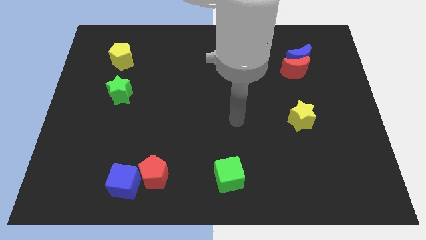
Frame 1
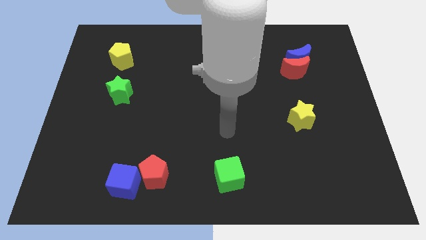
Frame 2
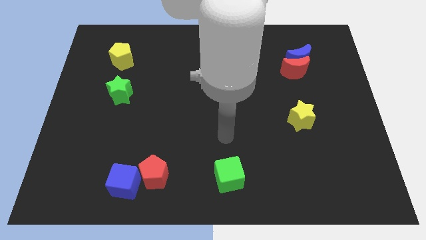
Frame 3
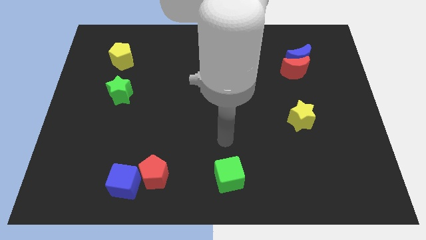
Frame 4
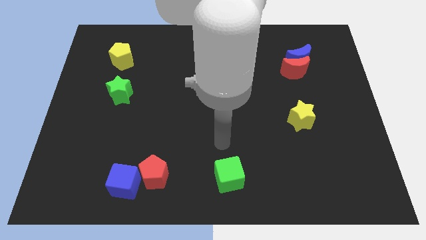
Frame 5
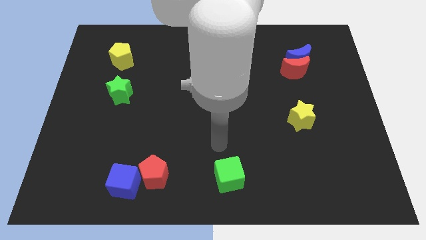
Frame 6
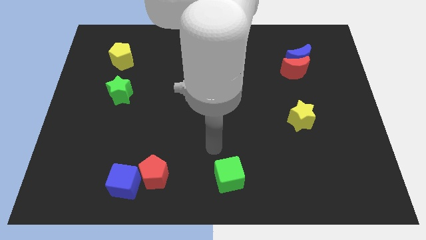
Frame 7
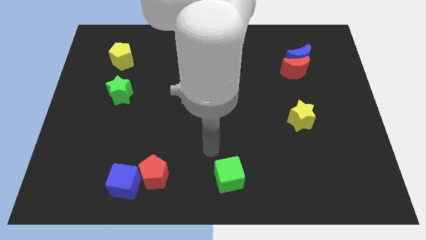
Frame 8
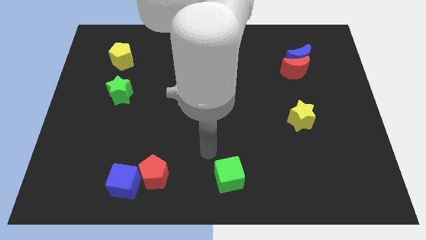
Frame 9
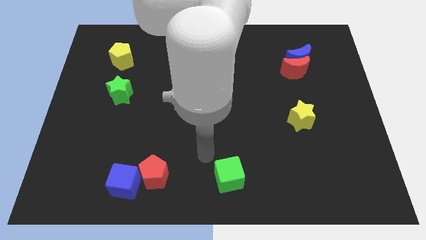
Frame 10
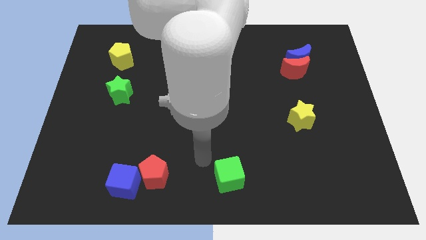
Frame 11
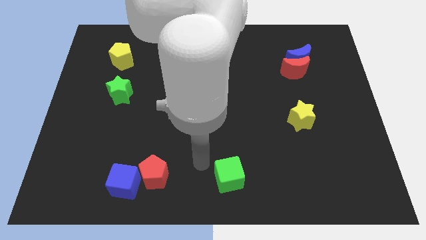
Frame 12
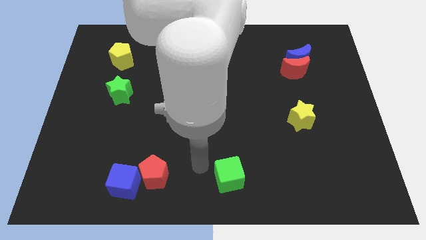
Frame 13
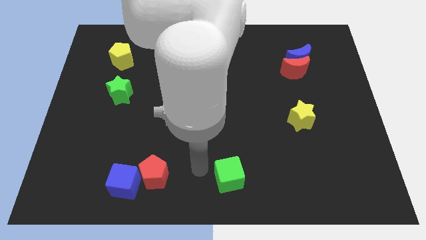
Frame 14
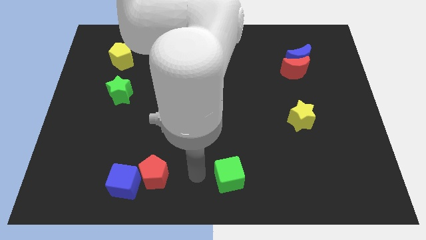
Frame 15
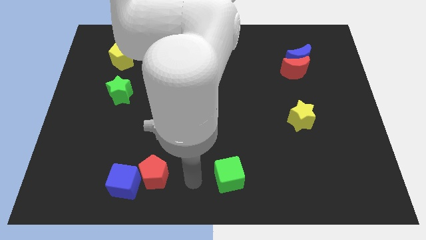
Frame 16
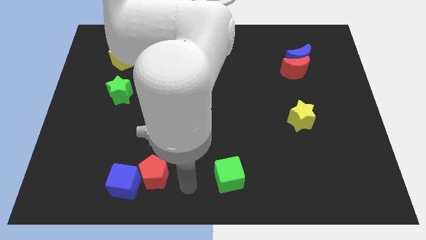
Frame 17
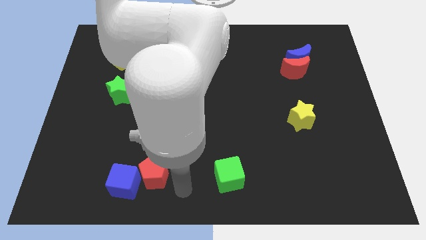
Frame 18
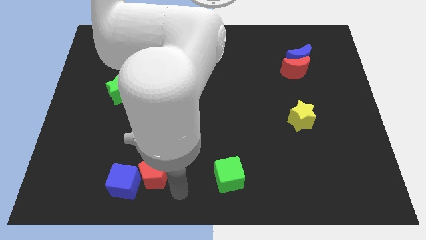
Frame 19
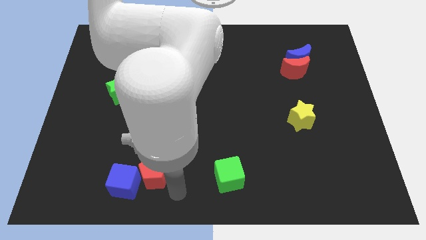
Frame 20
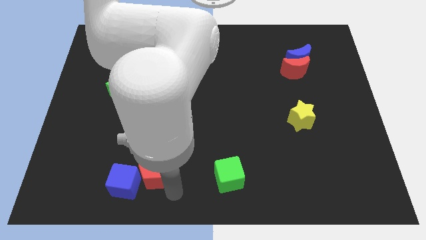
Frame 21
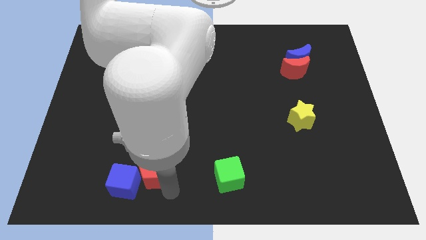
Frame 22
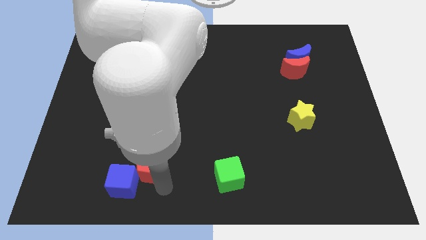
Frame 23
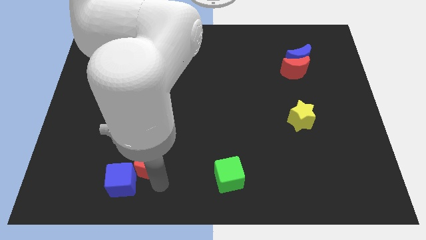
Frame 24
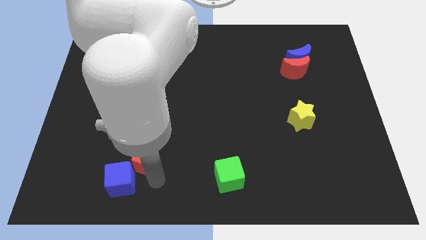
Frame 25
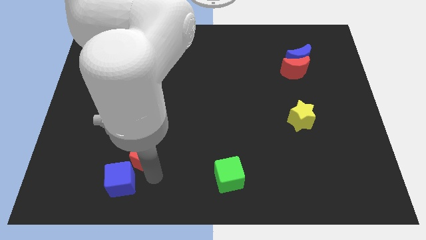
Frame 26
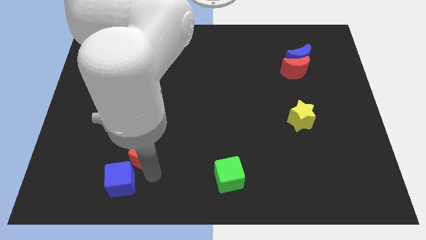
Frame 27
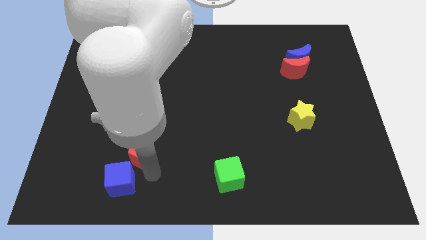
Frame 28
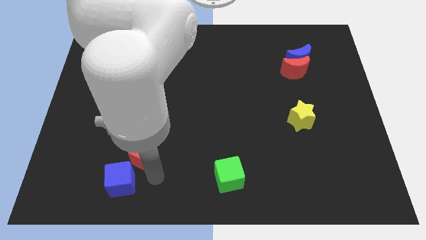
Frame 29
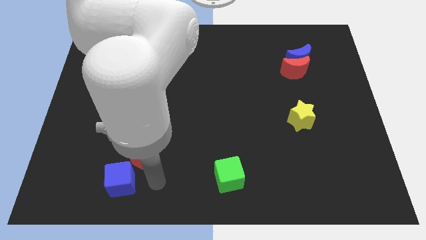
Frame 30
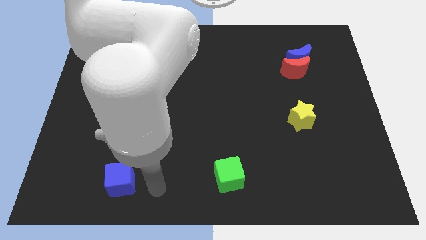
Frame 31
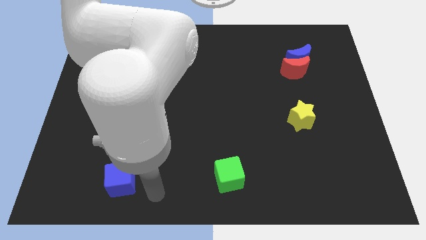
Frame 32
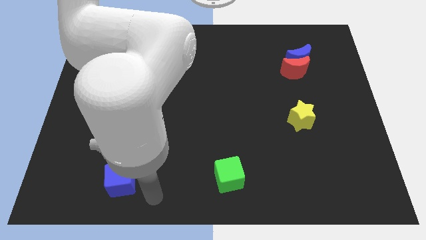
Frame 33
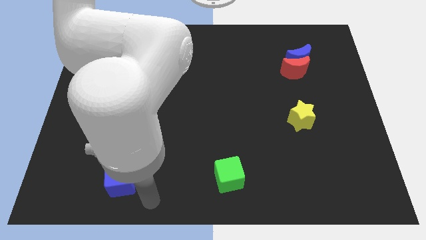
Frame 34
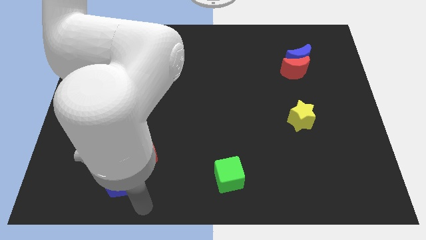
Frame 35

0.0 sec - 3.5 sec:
slightly push the red pentagon upwards

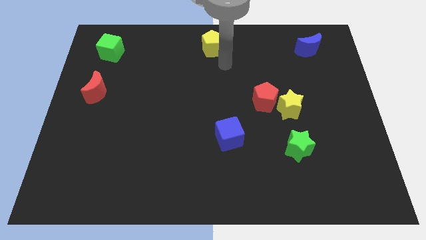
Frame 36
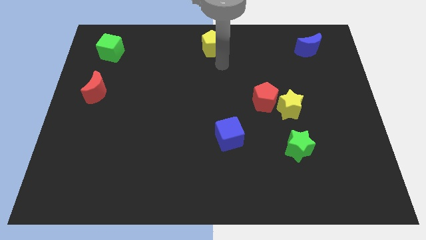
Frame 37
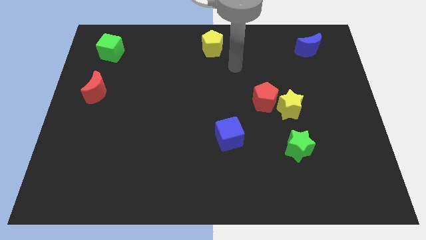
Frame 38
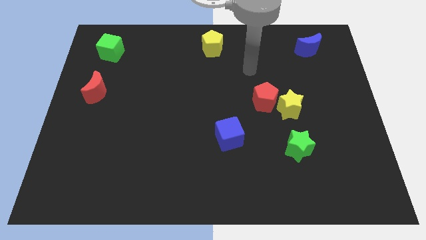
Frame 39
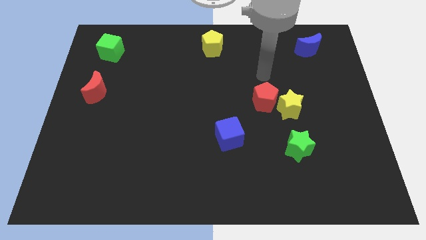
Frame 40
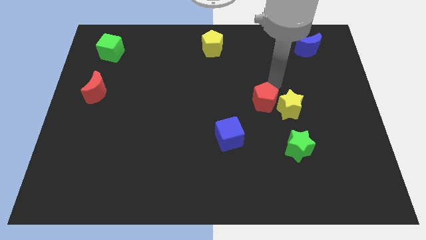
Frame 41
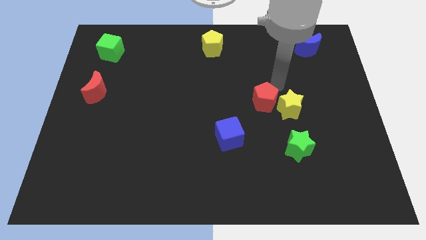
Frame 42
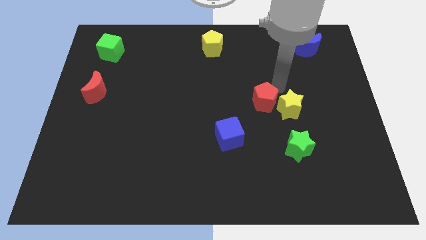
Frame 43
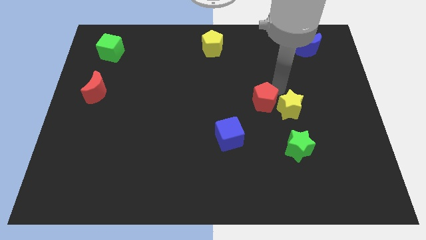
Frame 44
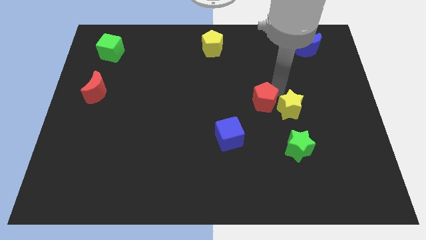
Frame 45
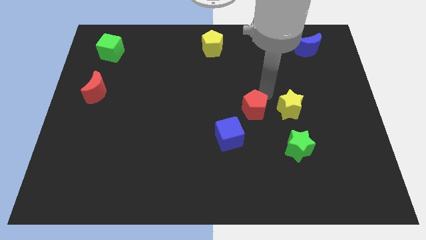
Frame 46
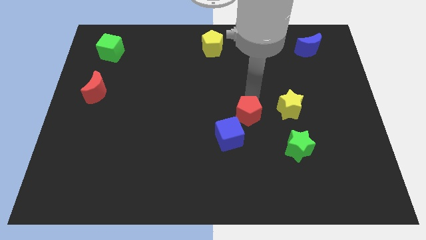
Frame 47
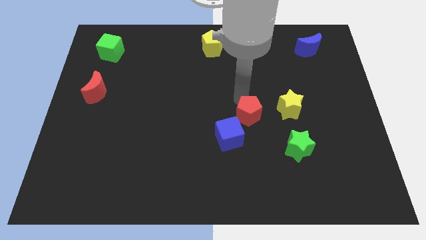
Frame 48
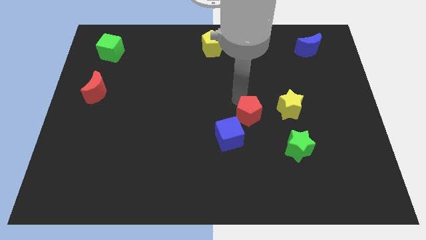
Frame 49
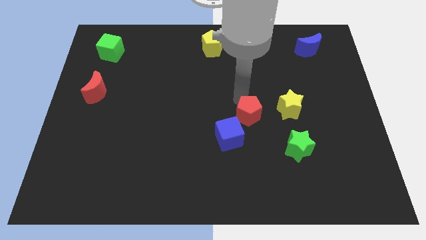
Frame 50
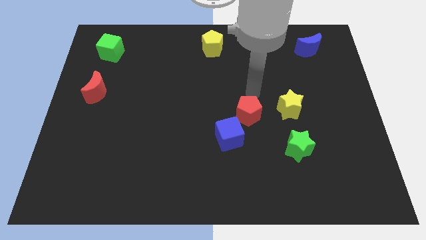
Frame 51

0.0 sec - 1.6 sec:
push red pentagon to the top right of blue cube

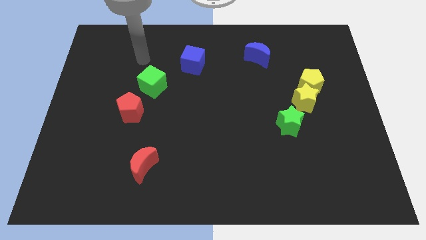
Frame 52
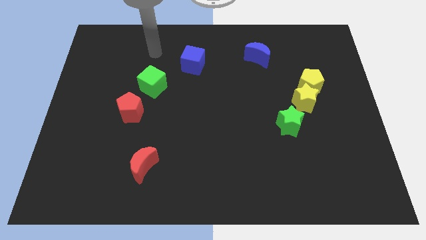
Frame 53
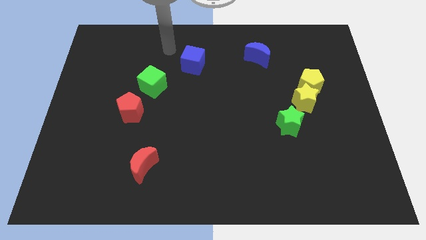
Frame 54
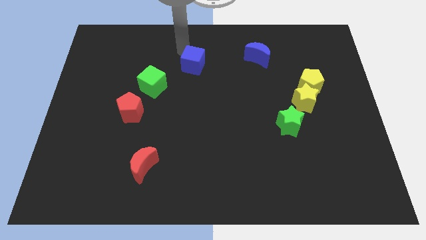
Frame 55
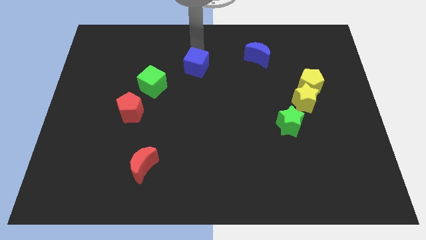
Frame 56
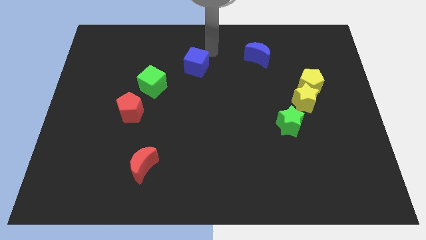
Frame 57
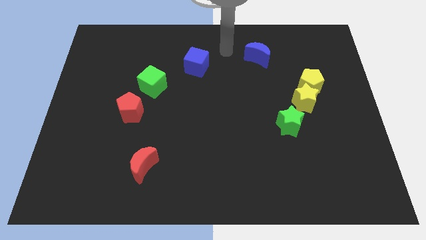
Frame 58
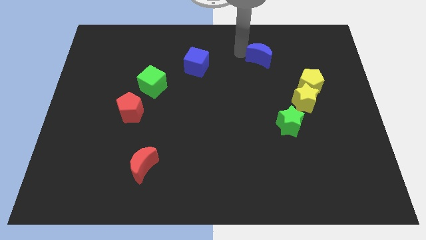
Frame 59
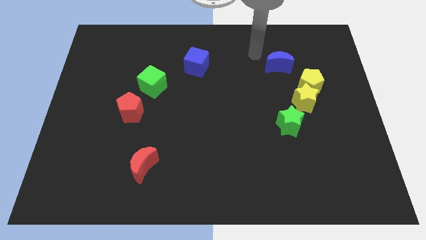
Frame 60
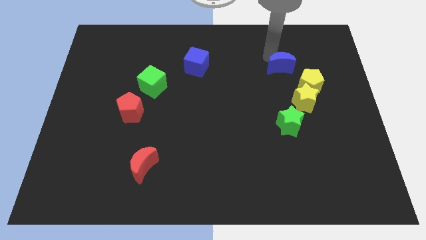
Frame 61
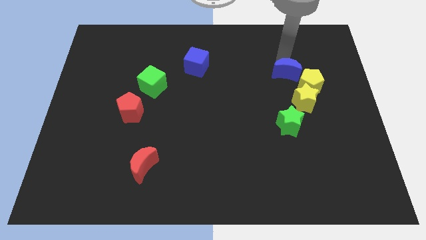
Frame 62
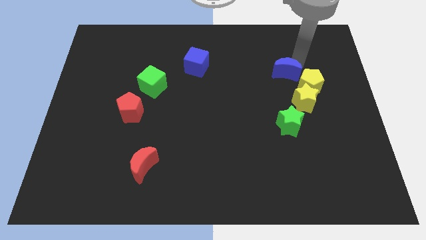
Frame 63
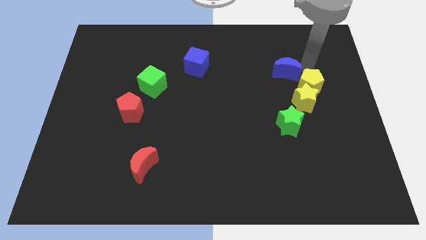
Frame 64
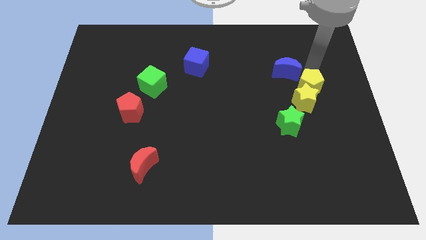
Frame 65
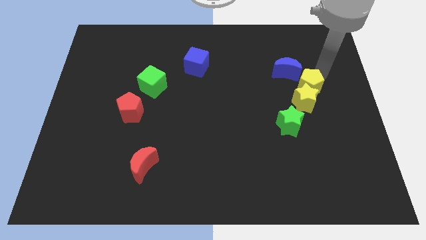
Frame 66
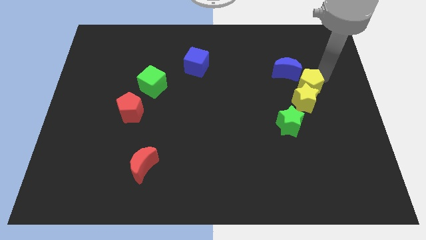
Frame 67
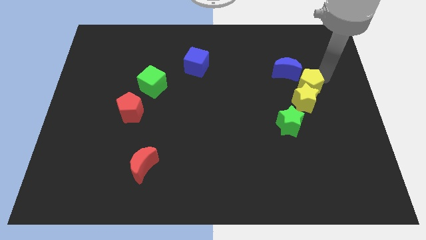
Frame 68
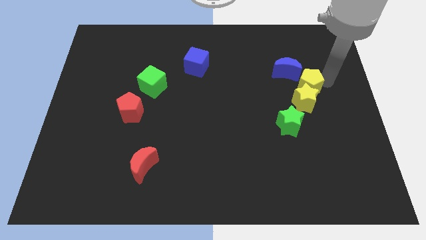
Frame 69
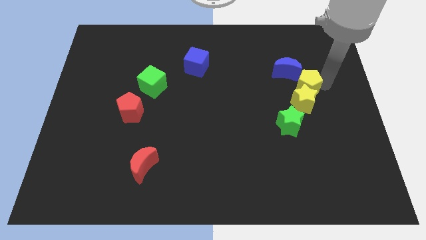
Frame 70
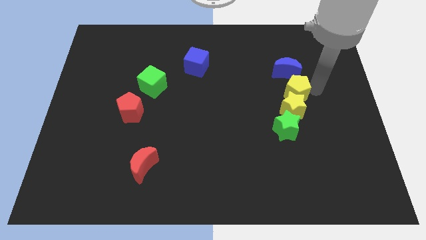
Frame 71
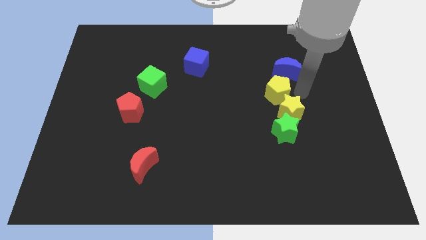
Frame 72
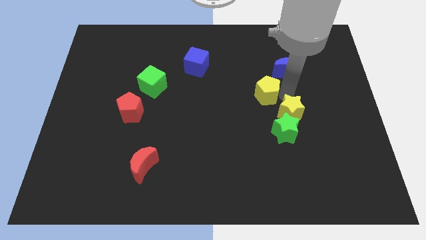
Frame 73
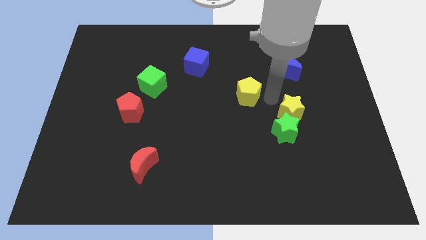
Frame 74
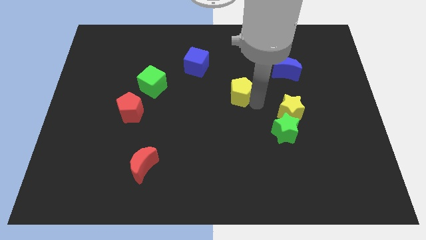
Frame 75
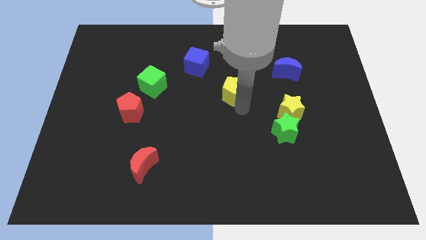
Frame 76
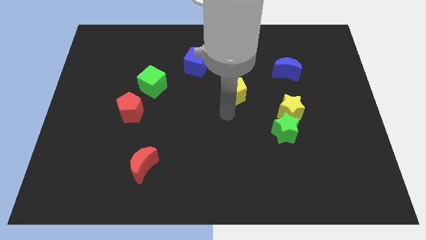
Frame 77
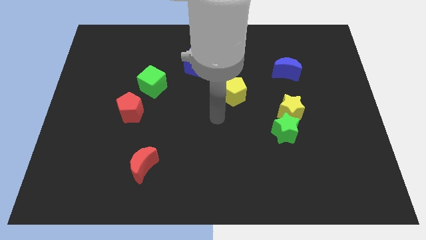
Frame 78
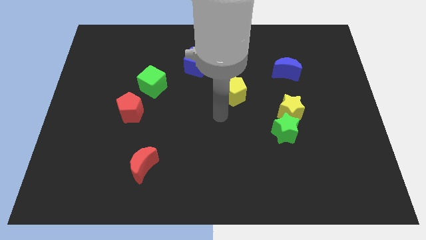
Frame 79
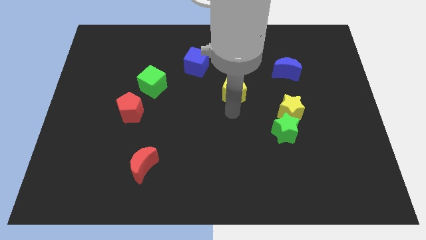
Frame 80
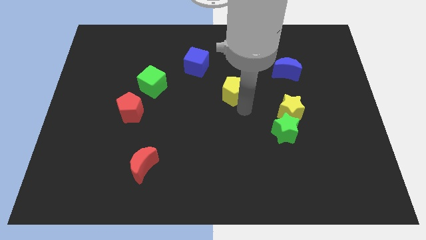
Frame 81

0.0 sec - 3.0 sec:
separate the yellow pentagon from the yellow star

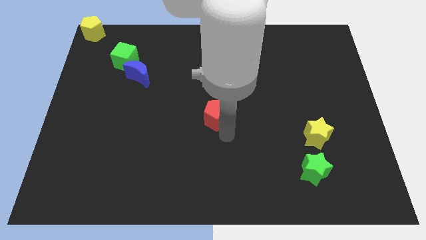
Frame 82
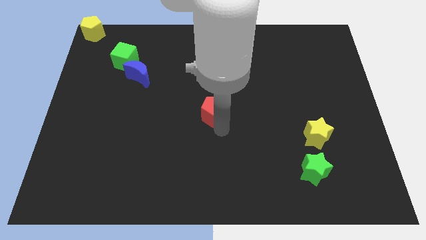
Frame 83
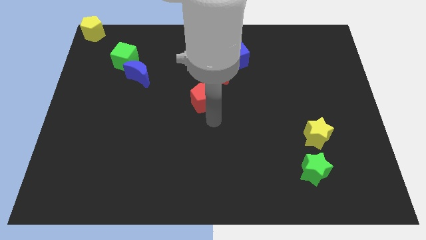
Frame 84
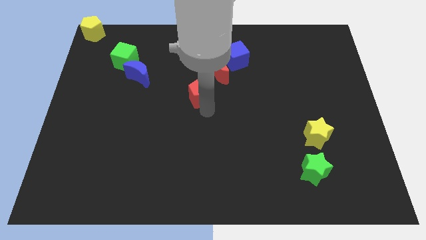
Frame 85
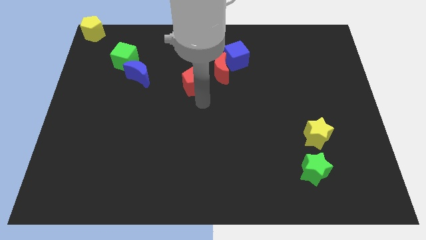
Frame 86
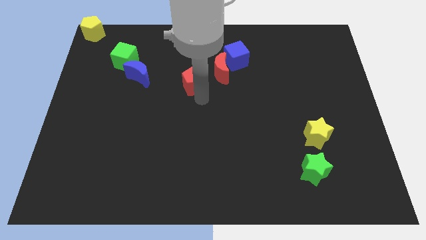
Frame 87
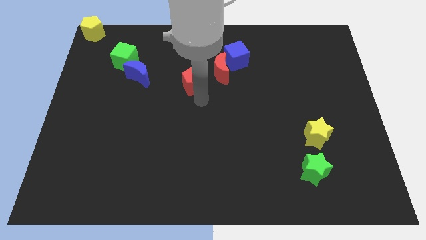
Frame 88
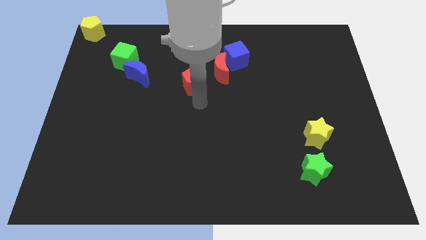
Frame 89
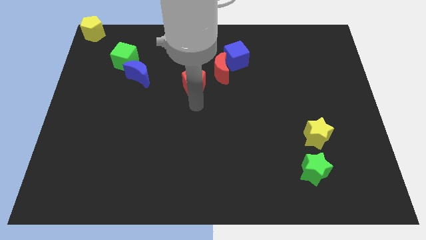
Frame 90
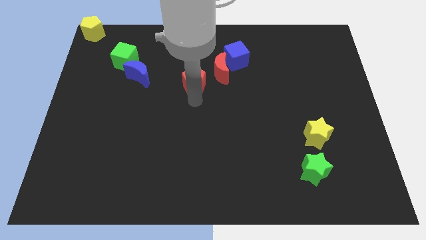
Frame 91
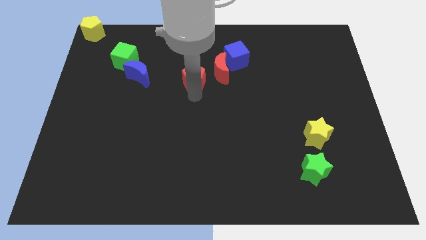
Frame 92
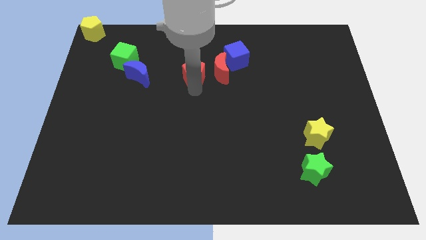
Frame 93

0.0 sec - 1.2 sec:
move the red pentagon to the left of the red crescent
